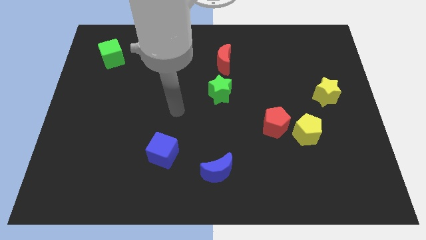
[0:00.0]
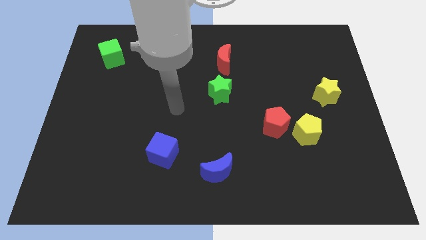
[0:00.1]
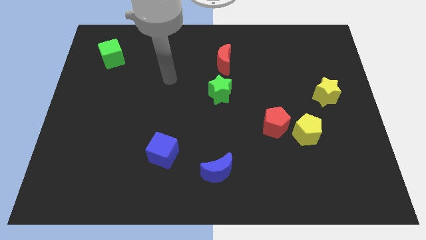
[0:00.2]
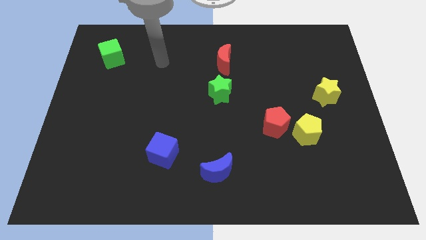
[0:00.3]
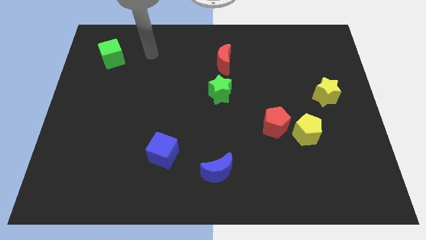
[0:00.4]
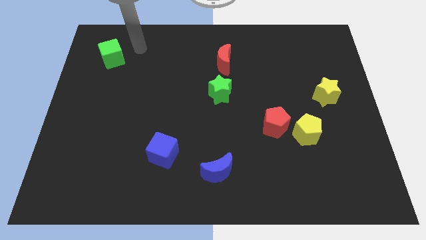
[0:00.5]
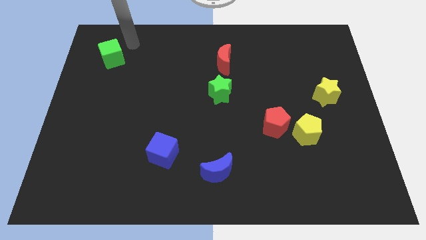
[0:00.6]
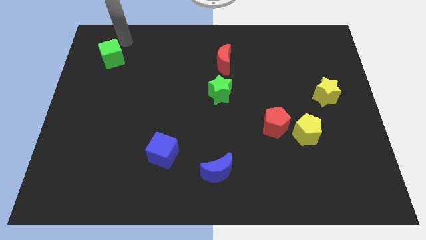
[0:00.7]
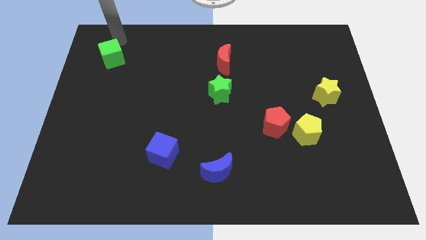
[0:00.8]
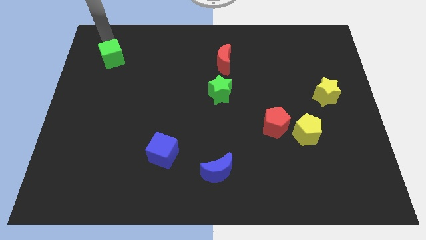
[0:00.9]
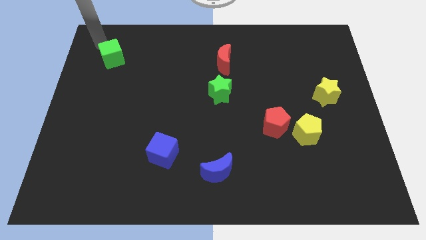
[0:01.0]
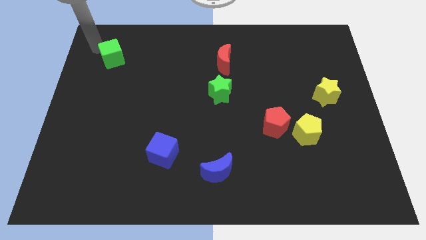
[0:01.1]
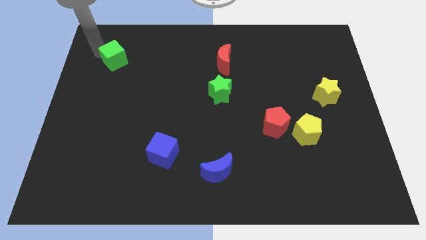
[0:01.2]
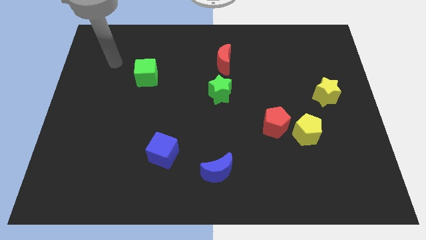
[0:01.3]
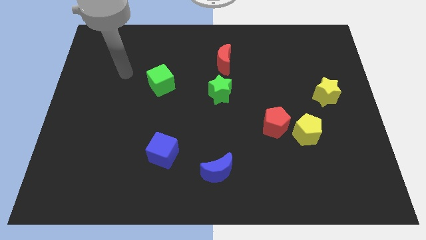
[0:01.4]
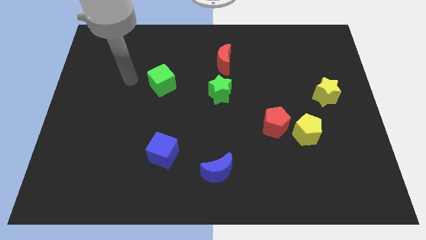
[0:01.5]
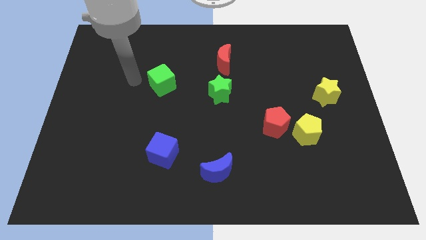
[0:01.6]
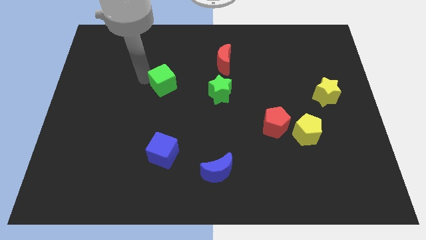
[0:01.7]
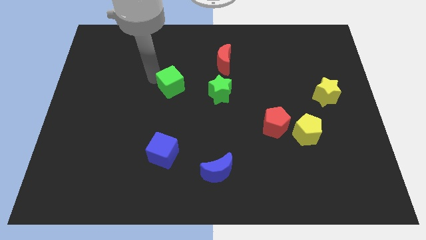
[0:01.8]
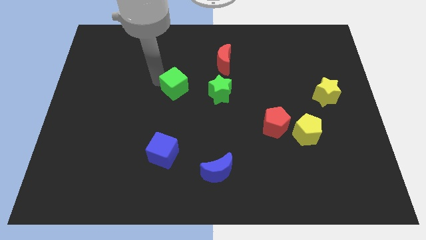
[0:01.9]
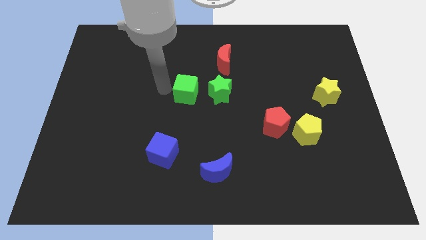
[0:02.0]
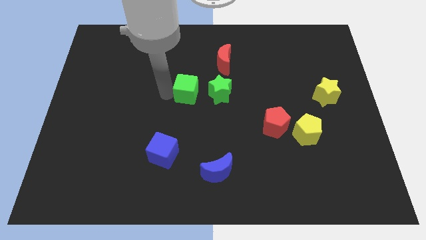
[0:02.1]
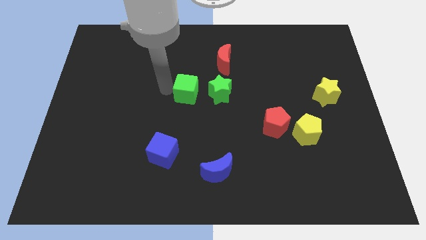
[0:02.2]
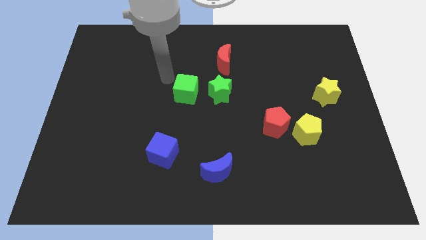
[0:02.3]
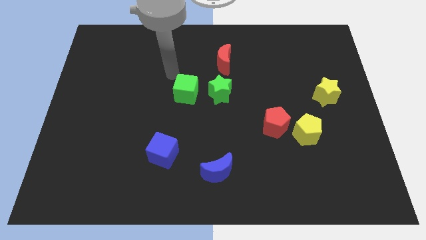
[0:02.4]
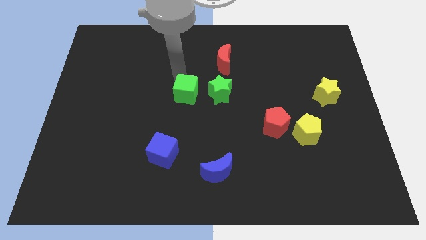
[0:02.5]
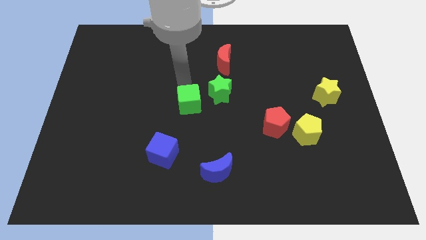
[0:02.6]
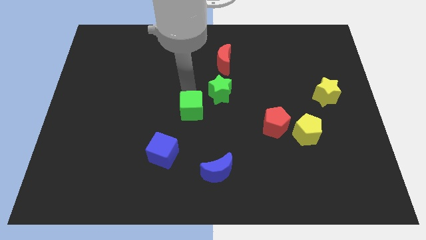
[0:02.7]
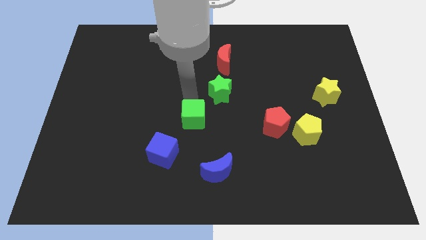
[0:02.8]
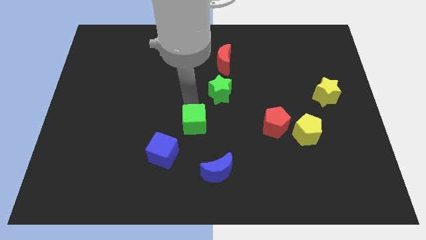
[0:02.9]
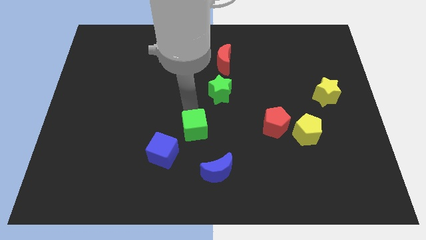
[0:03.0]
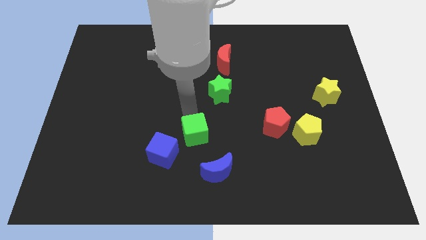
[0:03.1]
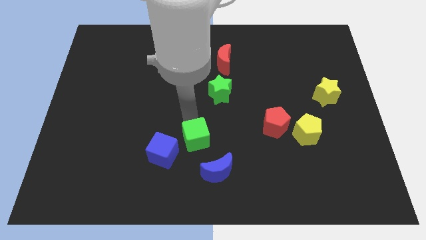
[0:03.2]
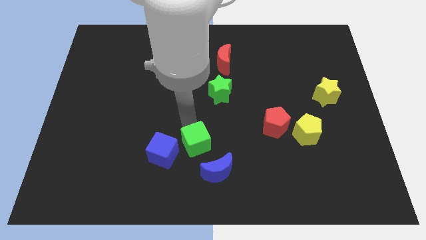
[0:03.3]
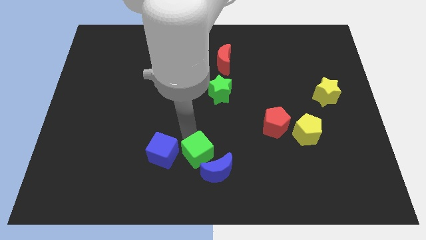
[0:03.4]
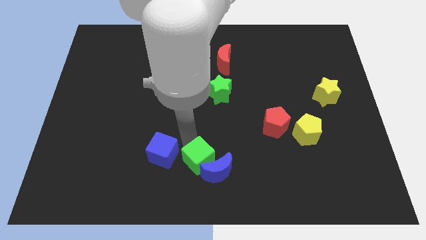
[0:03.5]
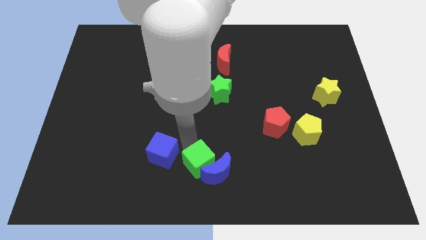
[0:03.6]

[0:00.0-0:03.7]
put the green cube towards the blue moon

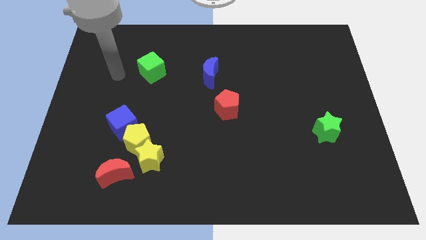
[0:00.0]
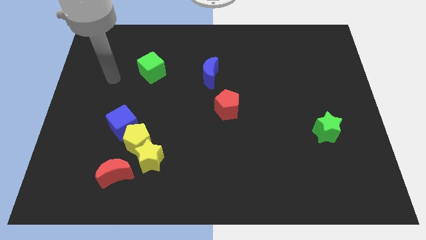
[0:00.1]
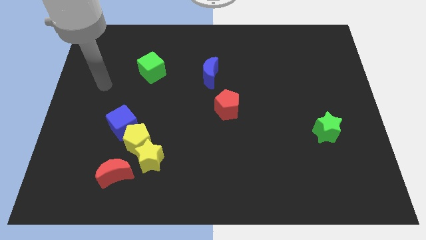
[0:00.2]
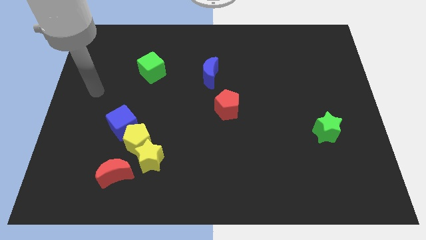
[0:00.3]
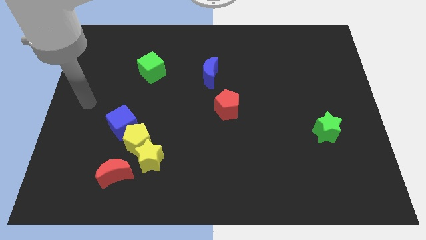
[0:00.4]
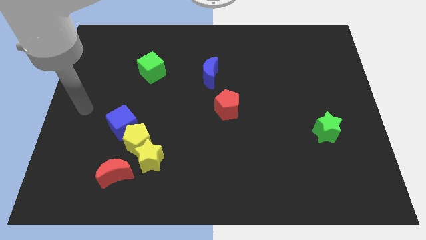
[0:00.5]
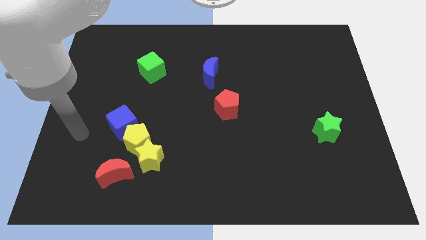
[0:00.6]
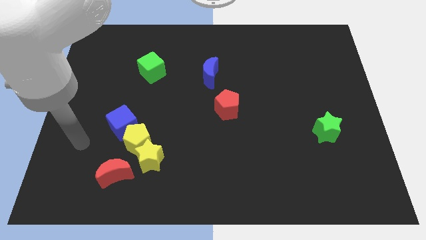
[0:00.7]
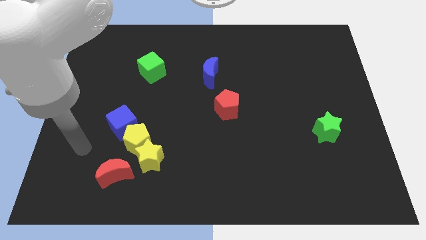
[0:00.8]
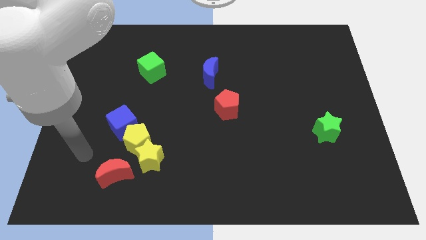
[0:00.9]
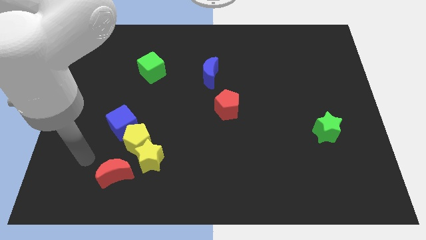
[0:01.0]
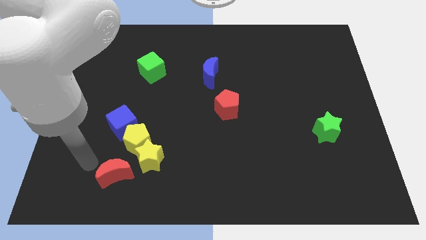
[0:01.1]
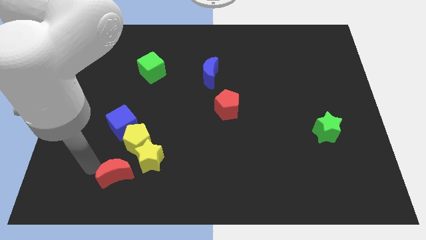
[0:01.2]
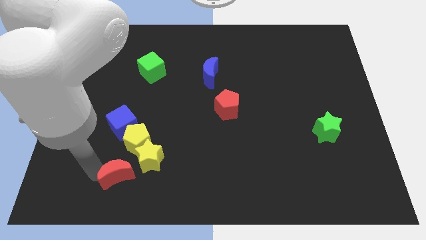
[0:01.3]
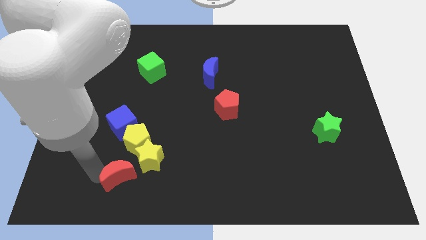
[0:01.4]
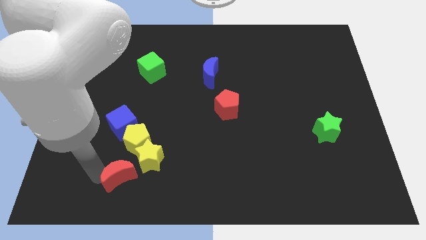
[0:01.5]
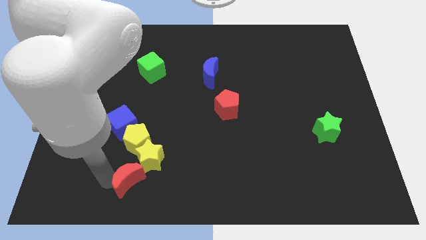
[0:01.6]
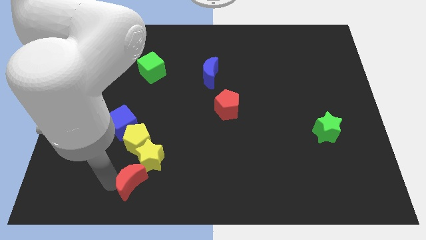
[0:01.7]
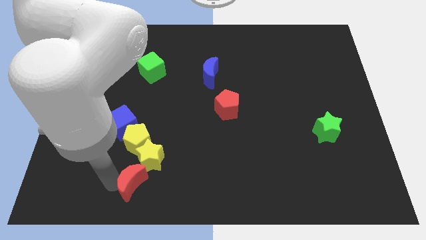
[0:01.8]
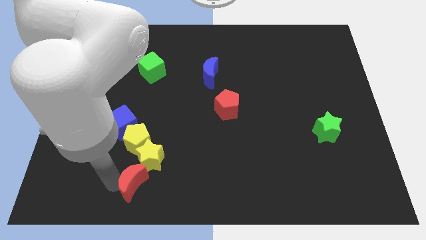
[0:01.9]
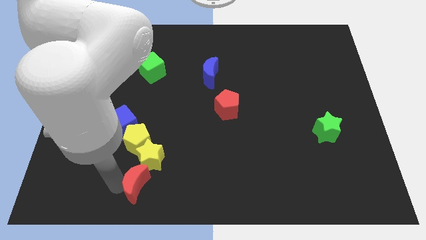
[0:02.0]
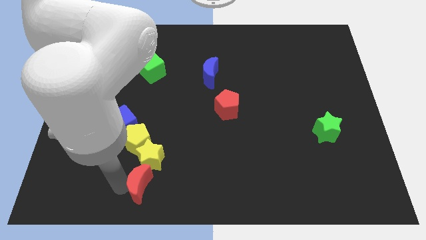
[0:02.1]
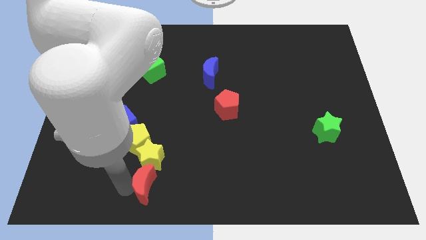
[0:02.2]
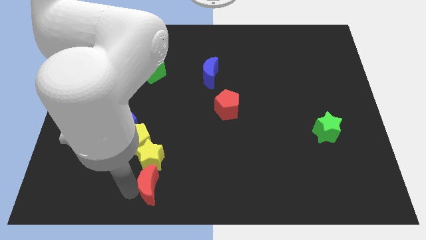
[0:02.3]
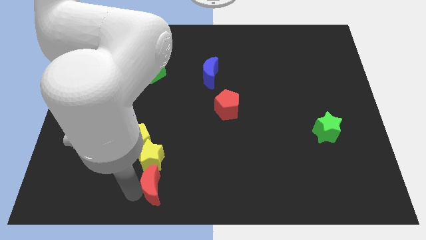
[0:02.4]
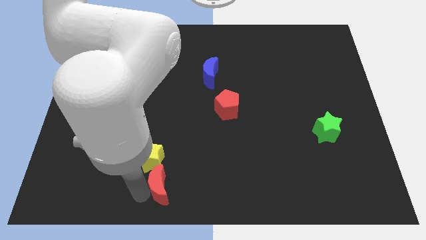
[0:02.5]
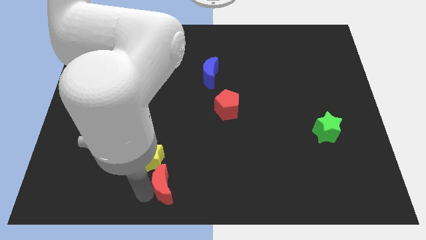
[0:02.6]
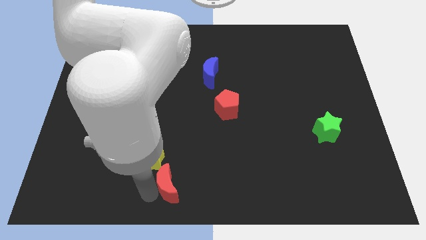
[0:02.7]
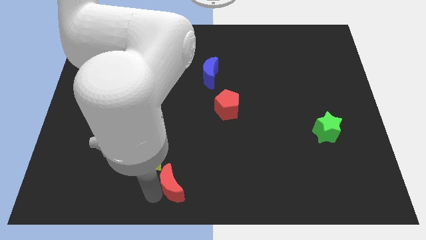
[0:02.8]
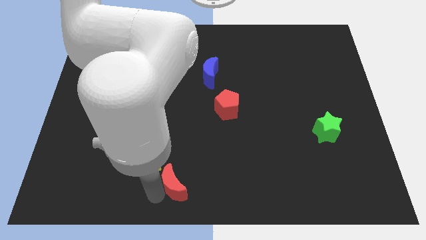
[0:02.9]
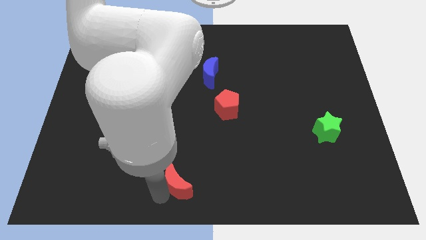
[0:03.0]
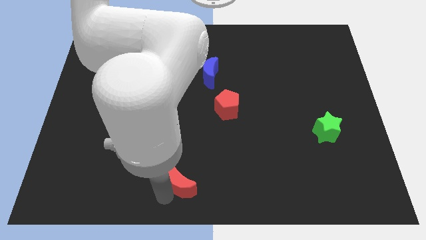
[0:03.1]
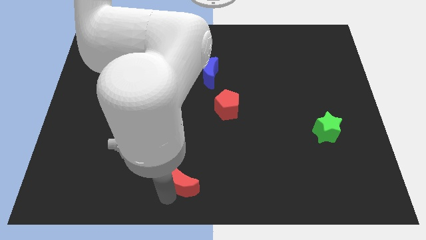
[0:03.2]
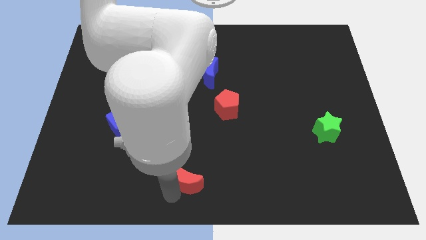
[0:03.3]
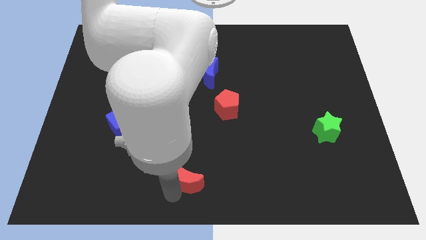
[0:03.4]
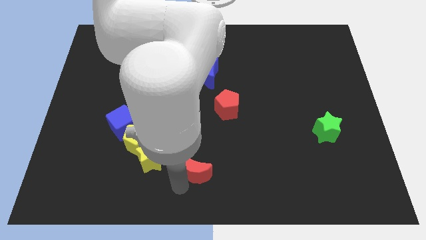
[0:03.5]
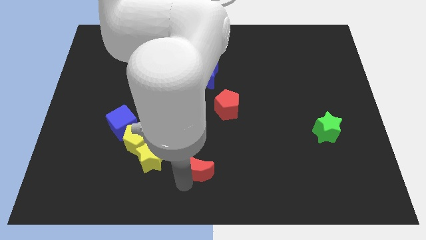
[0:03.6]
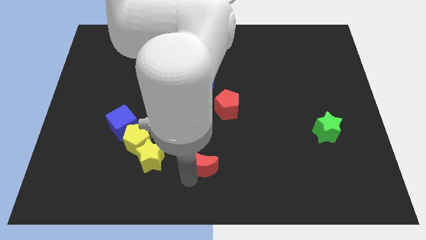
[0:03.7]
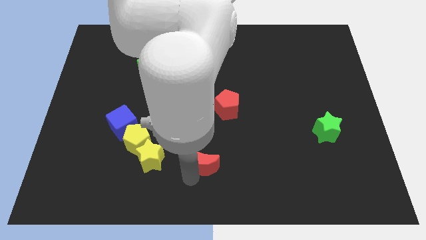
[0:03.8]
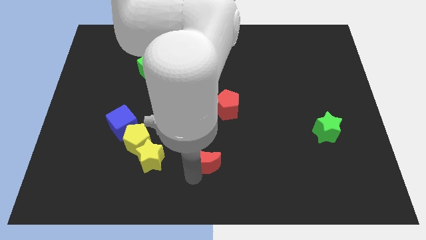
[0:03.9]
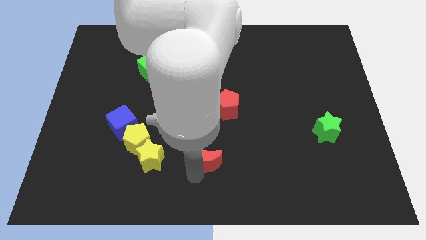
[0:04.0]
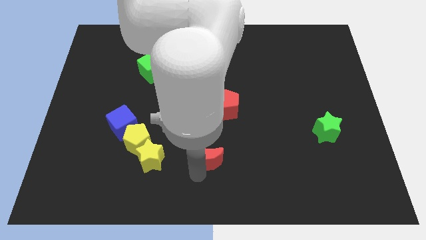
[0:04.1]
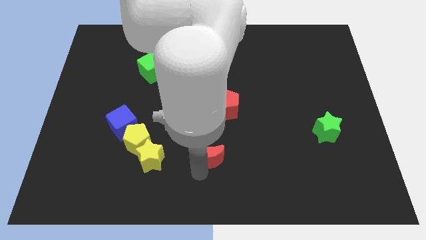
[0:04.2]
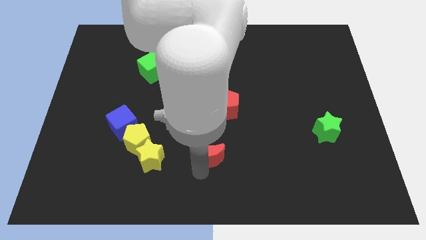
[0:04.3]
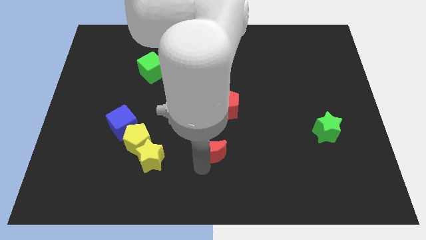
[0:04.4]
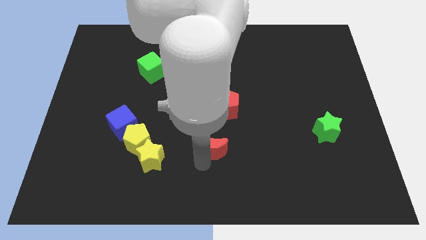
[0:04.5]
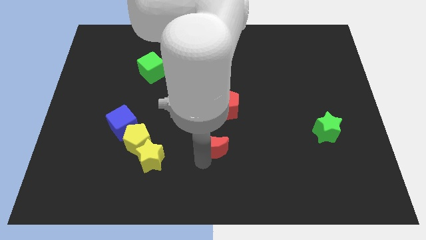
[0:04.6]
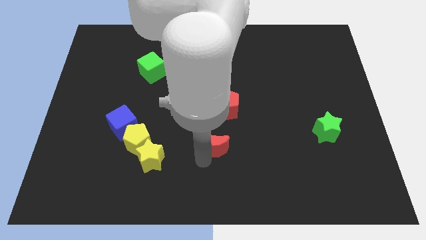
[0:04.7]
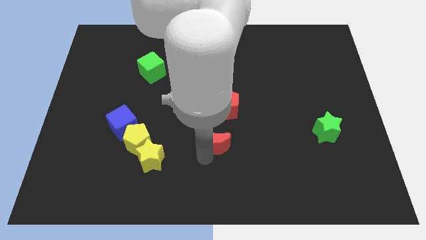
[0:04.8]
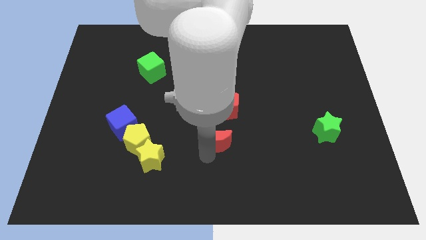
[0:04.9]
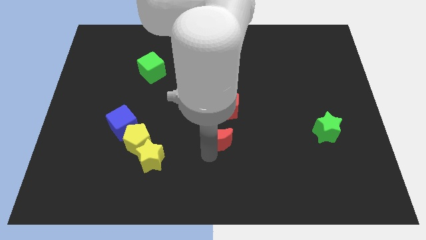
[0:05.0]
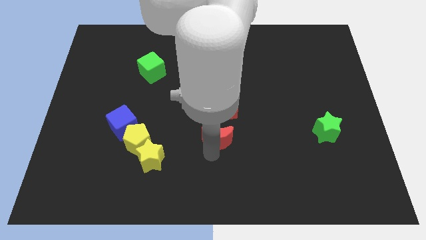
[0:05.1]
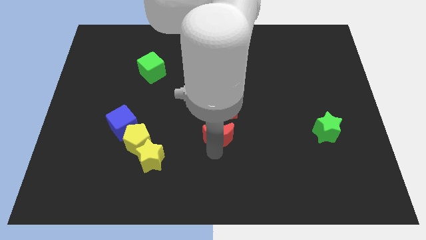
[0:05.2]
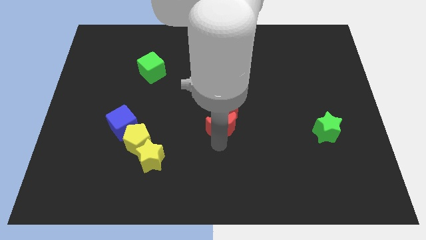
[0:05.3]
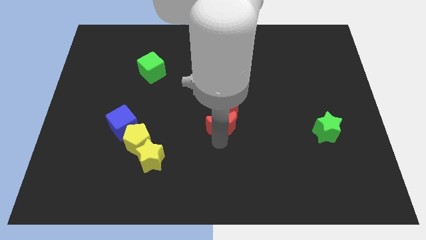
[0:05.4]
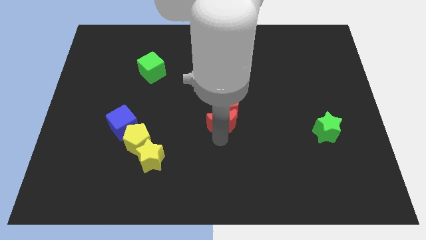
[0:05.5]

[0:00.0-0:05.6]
push the red moon to the red pentagon
